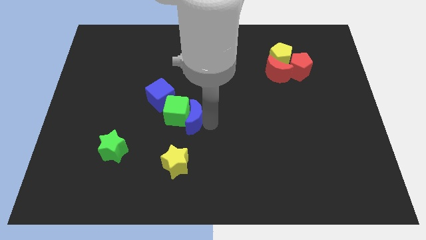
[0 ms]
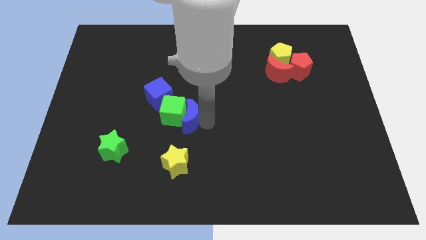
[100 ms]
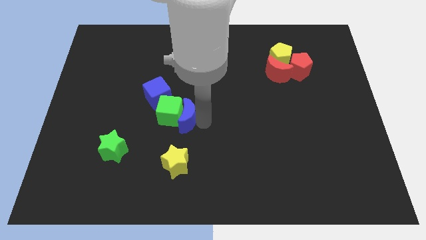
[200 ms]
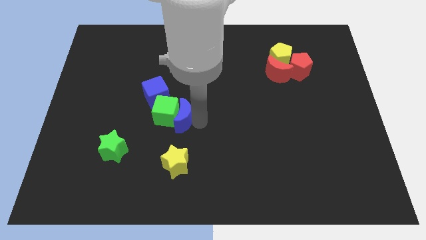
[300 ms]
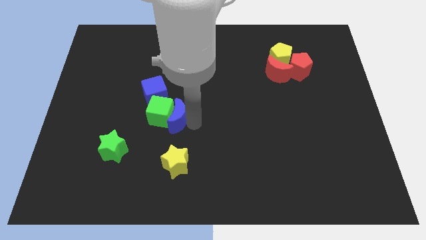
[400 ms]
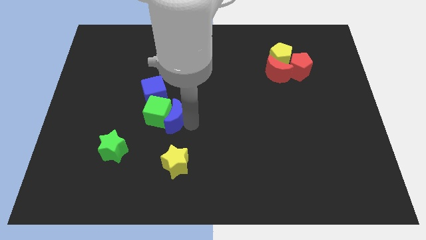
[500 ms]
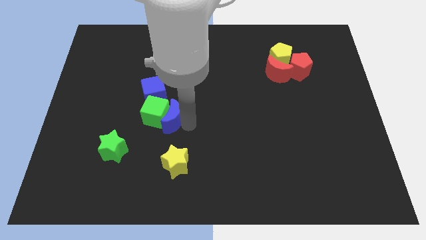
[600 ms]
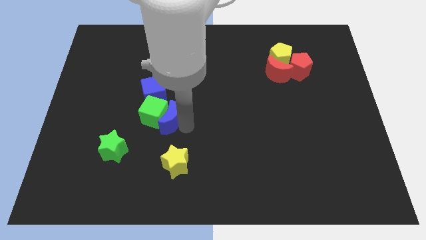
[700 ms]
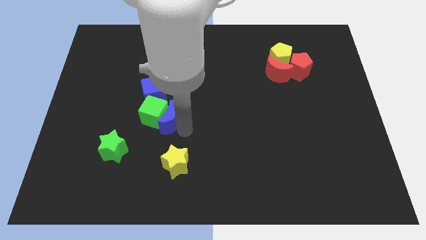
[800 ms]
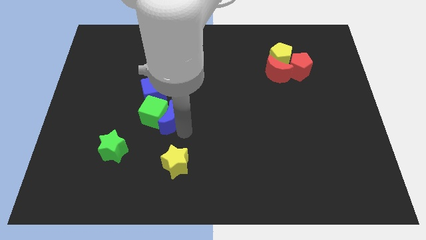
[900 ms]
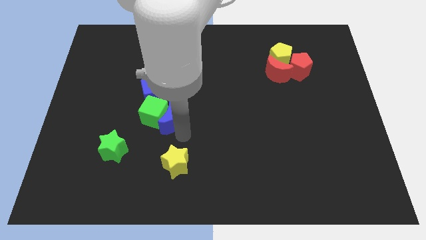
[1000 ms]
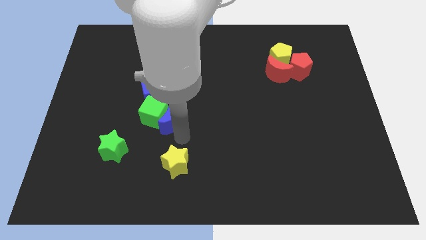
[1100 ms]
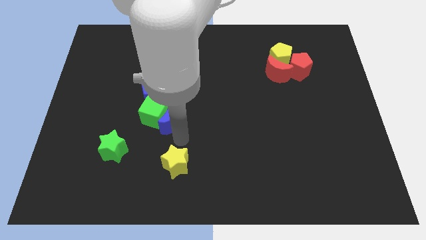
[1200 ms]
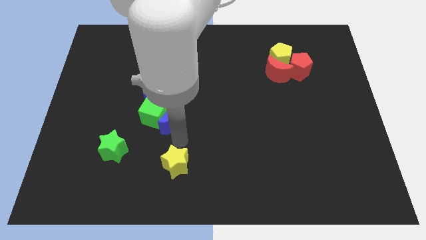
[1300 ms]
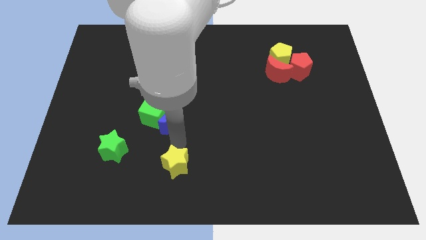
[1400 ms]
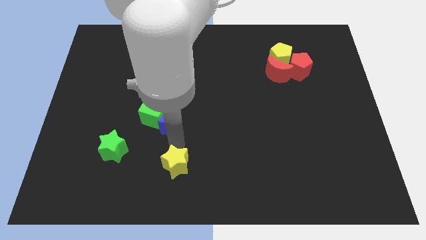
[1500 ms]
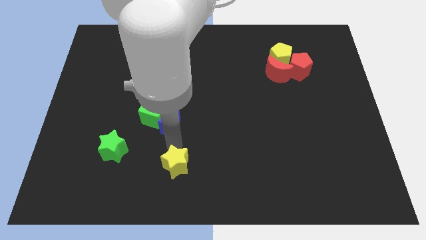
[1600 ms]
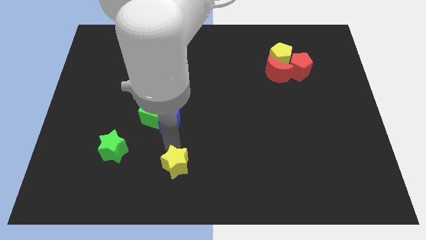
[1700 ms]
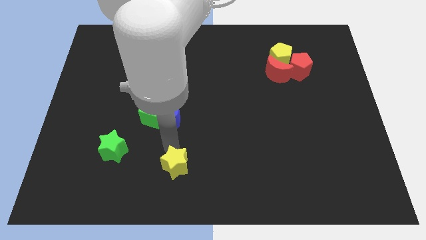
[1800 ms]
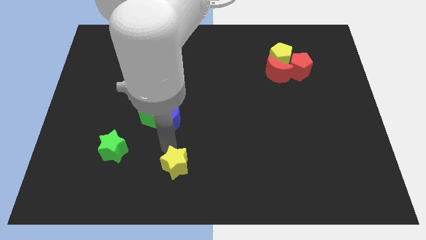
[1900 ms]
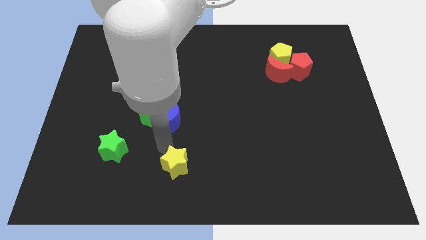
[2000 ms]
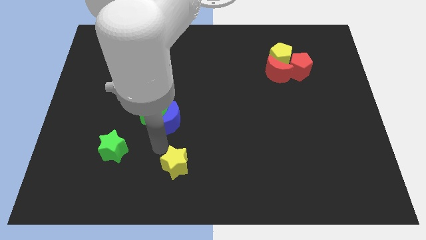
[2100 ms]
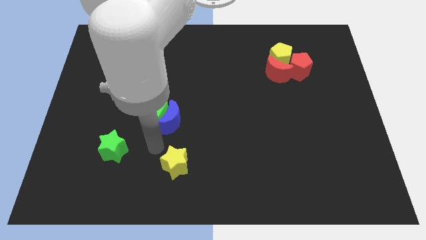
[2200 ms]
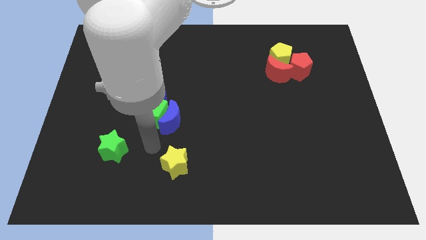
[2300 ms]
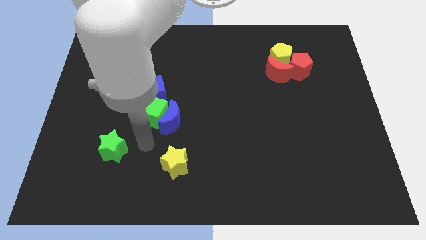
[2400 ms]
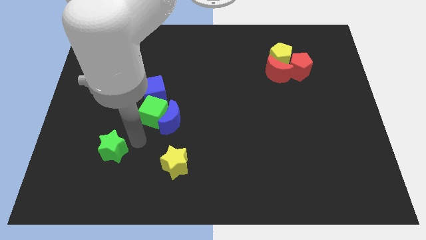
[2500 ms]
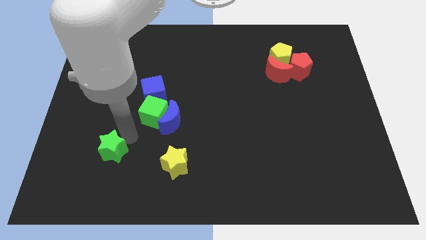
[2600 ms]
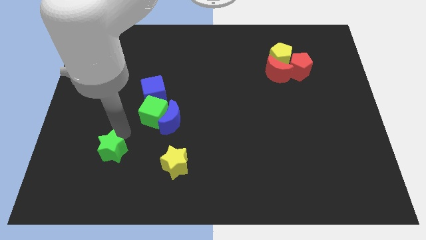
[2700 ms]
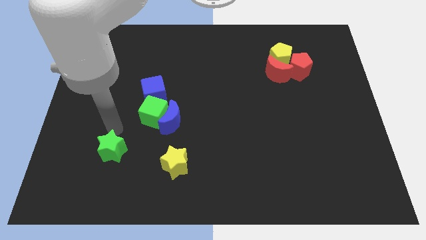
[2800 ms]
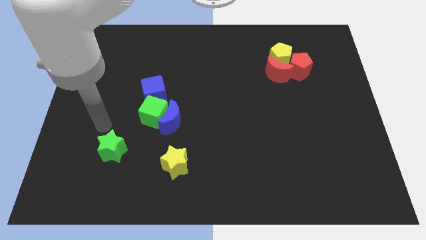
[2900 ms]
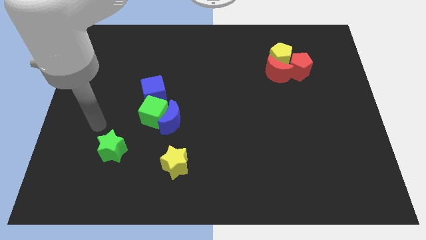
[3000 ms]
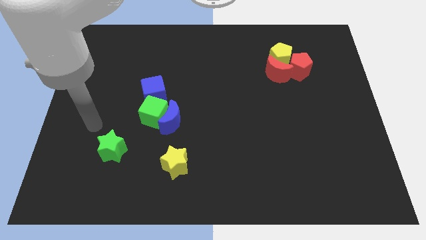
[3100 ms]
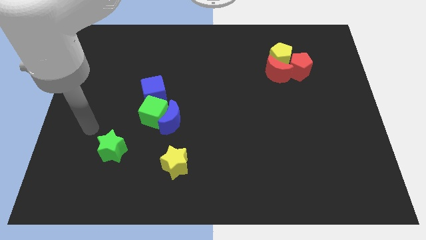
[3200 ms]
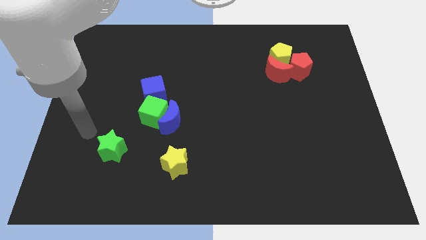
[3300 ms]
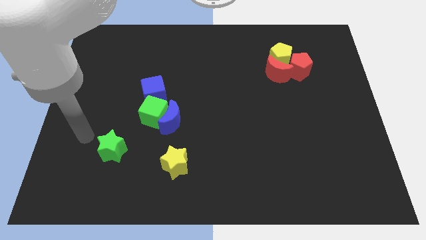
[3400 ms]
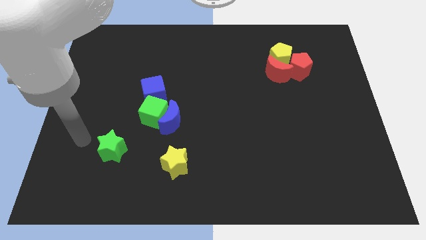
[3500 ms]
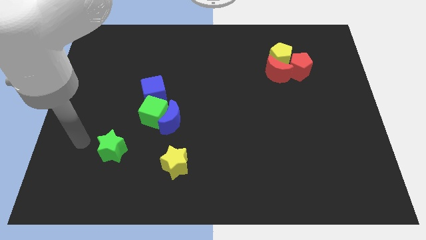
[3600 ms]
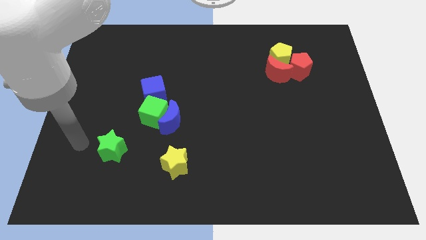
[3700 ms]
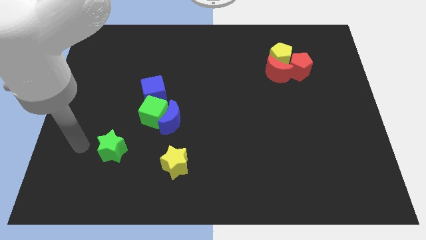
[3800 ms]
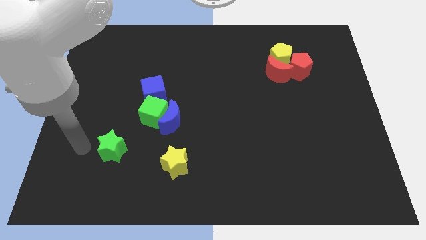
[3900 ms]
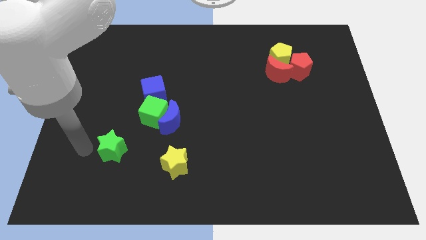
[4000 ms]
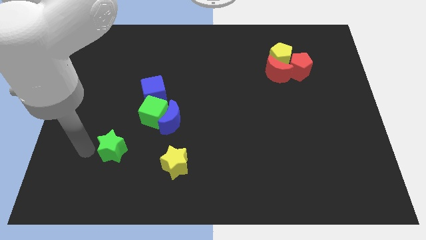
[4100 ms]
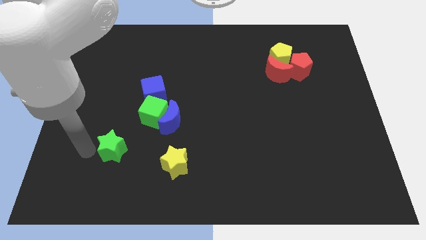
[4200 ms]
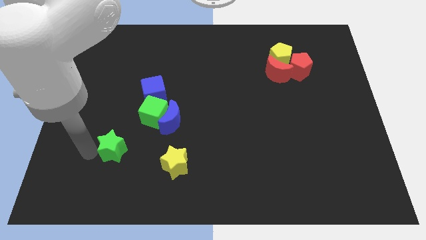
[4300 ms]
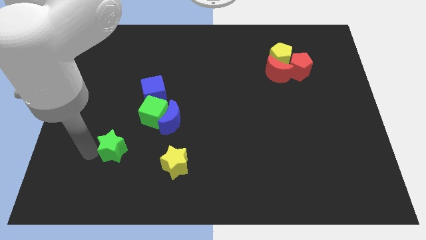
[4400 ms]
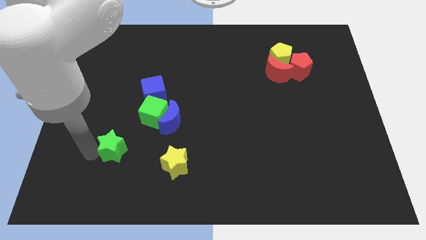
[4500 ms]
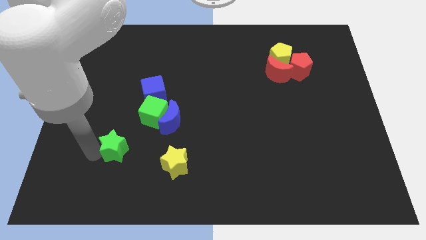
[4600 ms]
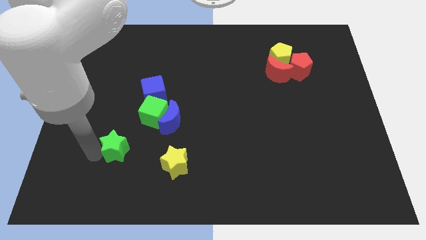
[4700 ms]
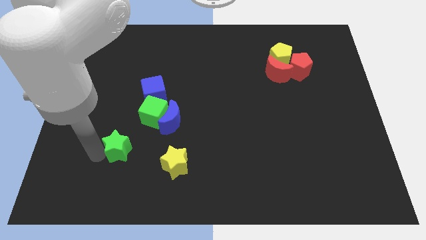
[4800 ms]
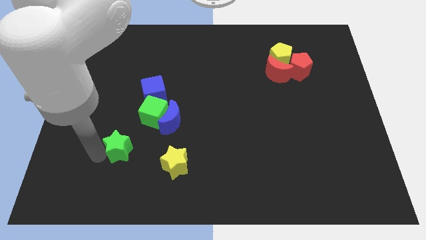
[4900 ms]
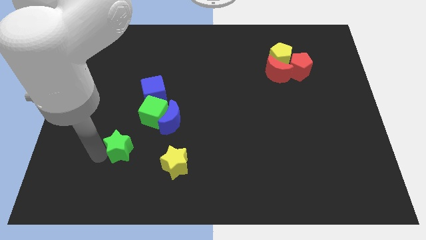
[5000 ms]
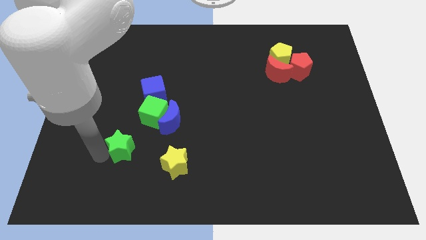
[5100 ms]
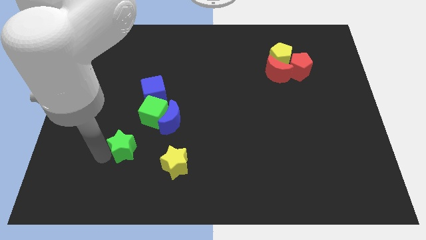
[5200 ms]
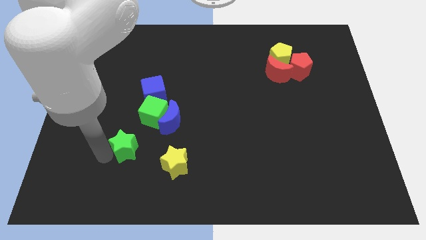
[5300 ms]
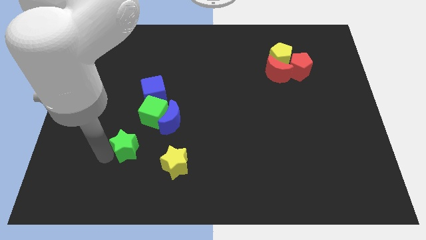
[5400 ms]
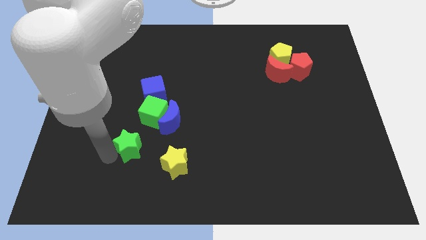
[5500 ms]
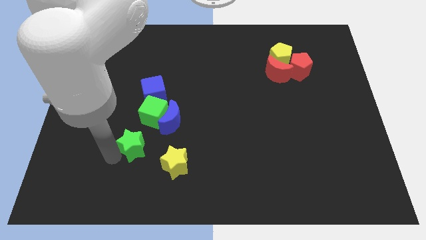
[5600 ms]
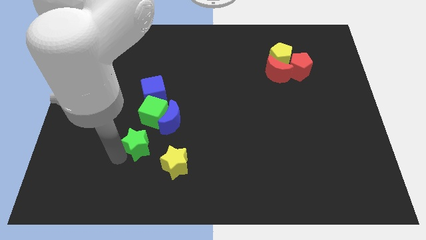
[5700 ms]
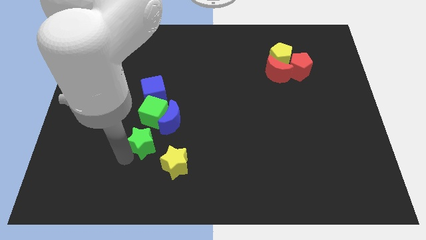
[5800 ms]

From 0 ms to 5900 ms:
place the green star below the green cube

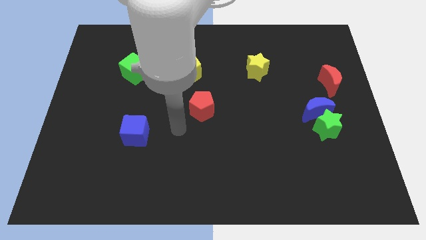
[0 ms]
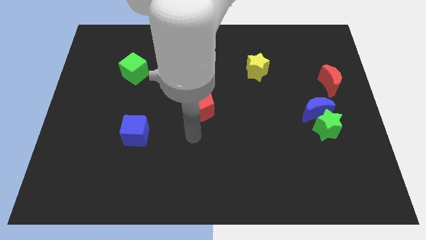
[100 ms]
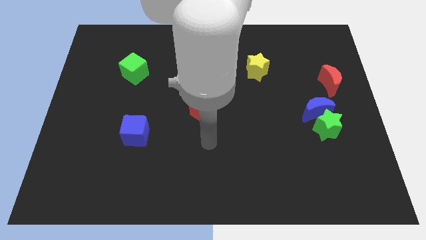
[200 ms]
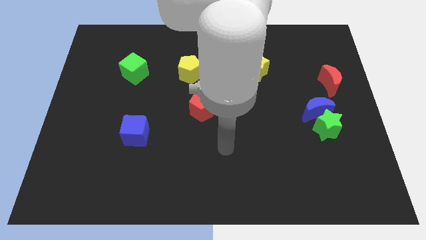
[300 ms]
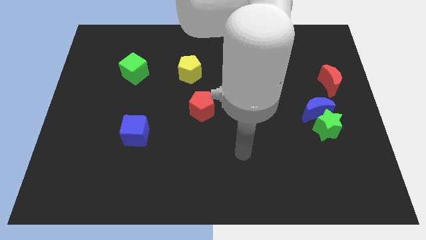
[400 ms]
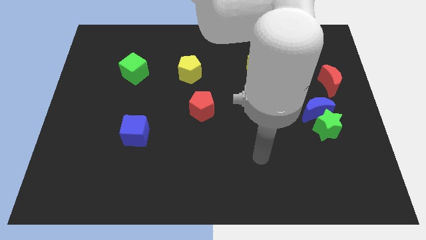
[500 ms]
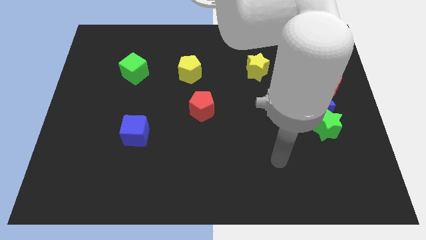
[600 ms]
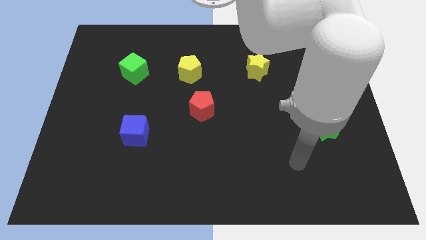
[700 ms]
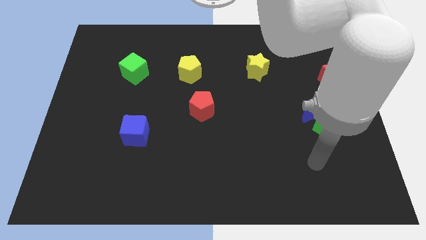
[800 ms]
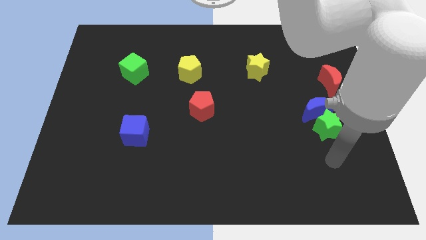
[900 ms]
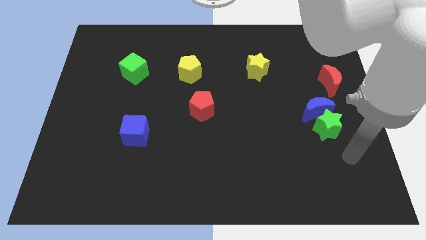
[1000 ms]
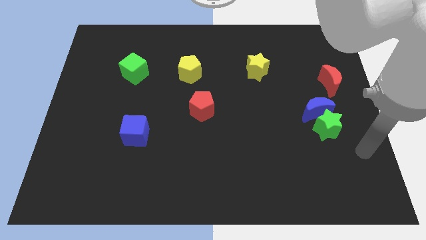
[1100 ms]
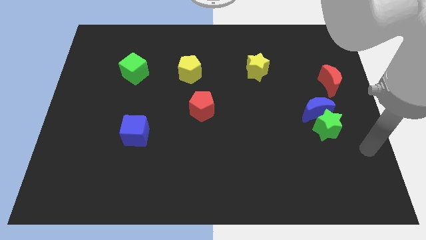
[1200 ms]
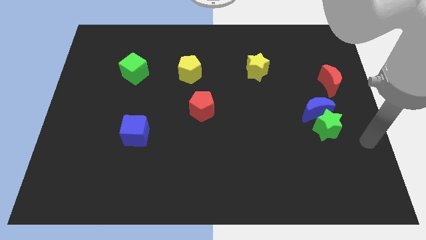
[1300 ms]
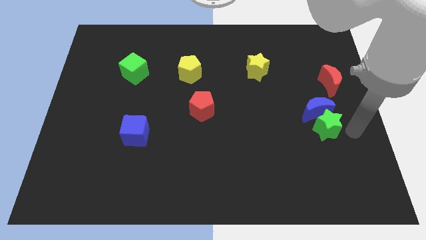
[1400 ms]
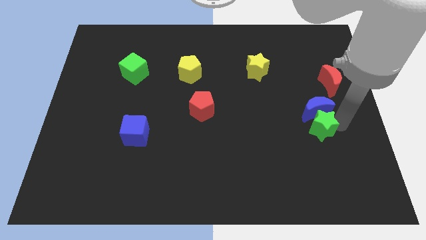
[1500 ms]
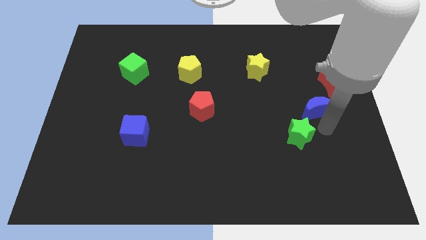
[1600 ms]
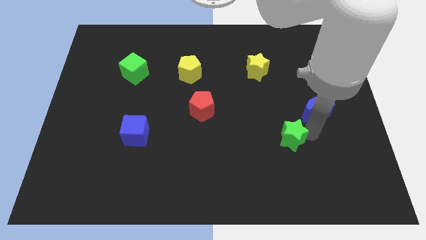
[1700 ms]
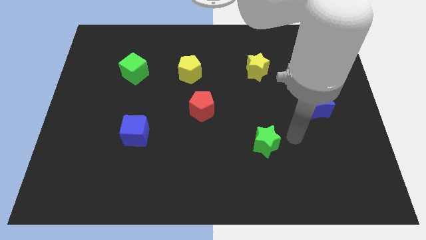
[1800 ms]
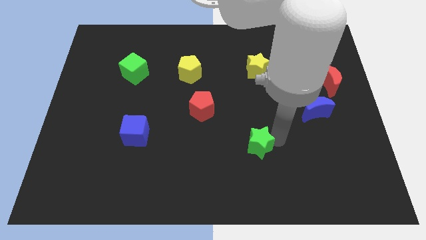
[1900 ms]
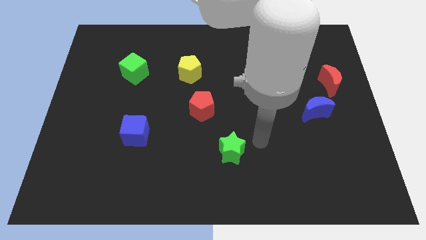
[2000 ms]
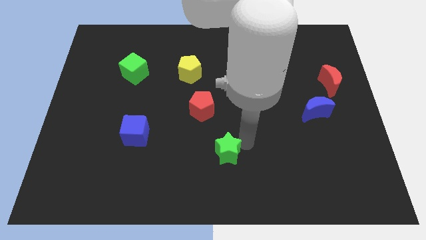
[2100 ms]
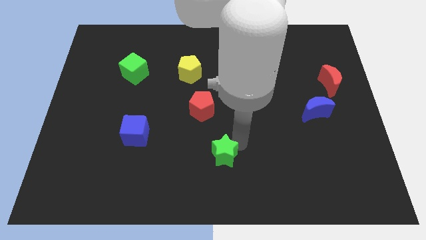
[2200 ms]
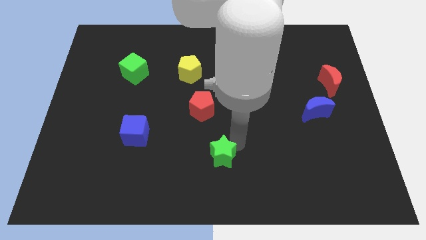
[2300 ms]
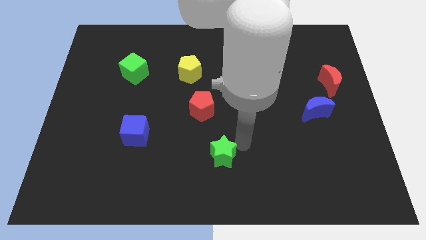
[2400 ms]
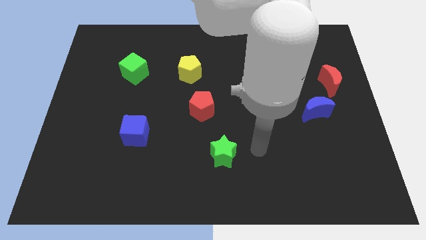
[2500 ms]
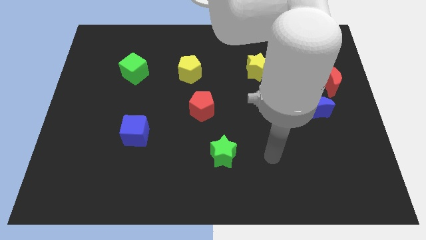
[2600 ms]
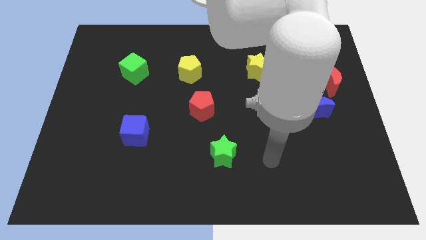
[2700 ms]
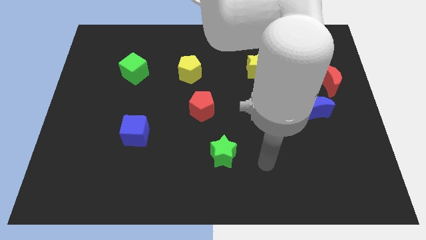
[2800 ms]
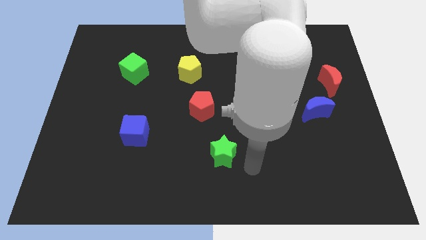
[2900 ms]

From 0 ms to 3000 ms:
move the green star towards the bottom center
